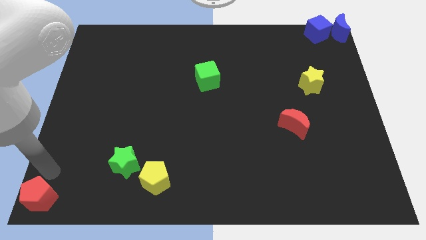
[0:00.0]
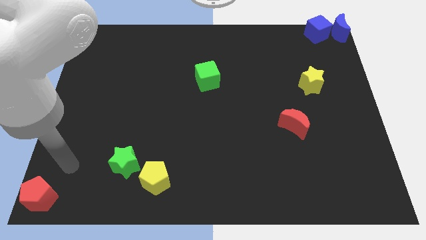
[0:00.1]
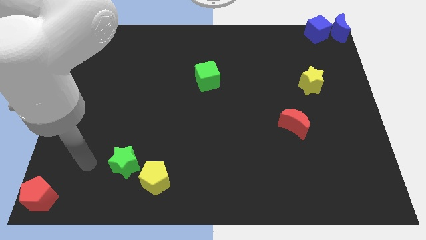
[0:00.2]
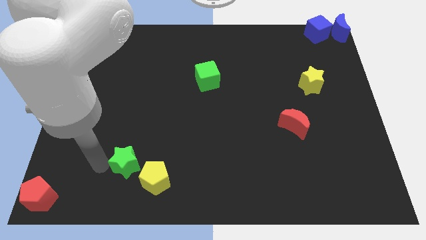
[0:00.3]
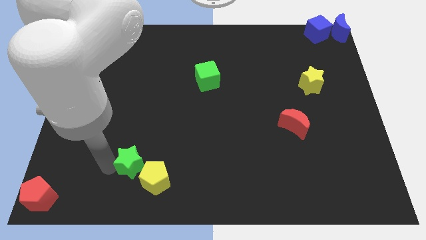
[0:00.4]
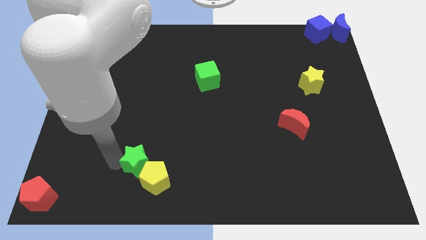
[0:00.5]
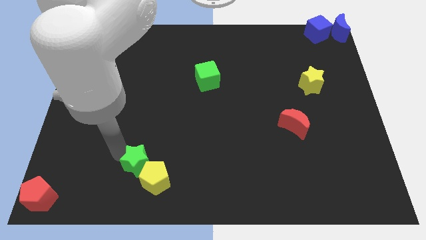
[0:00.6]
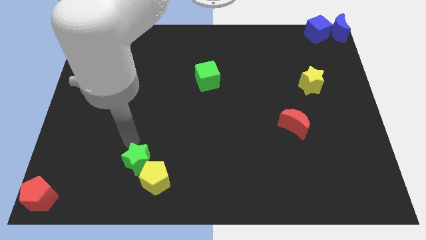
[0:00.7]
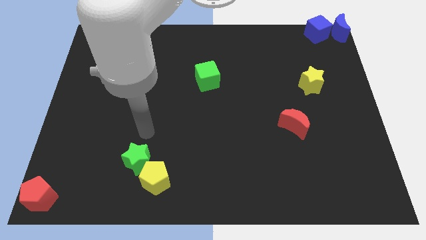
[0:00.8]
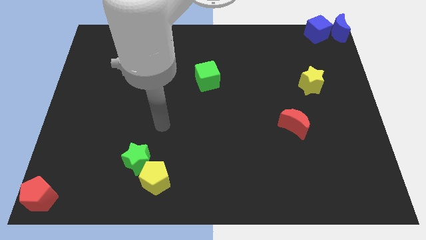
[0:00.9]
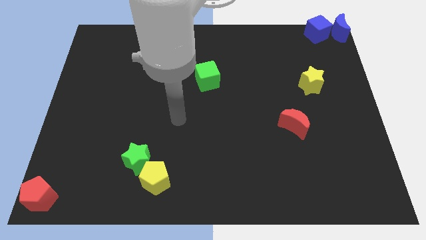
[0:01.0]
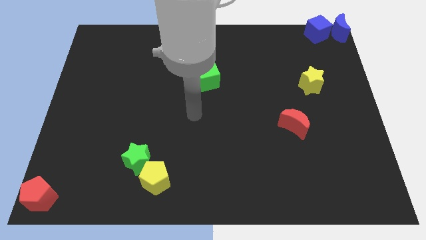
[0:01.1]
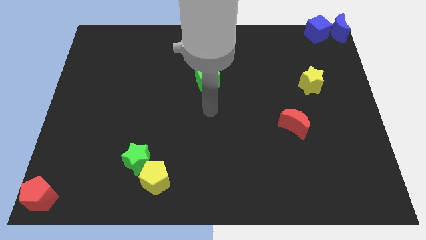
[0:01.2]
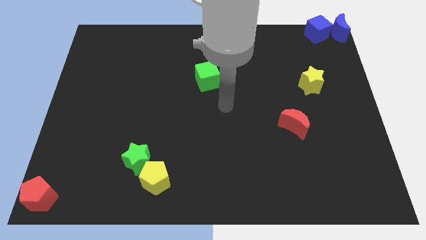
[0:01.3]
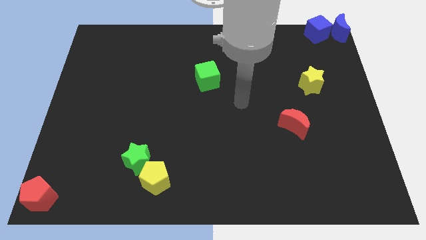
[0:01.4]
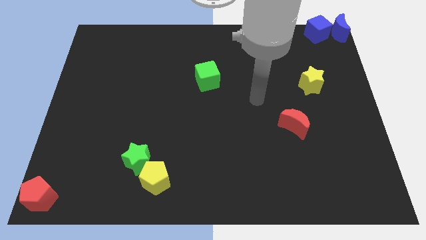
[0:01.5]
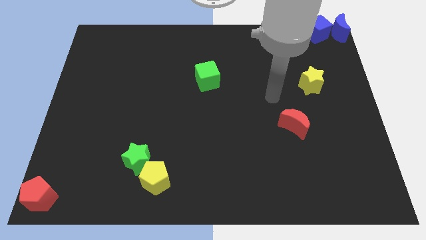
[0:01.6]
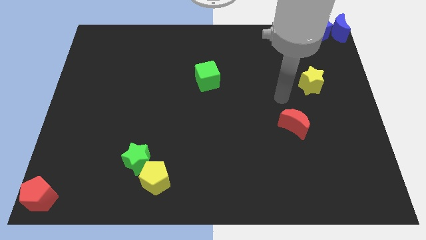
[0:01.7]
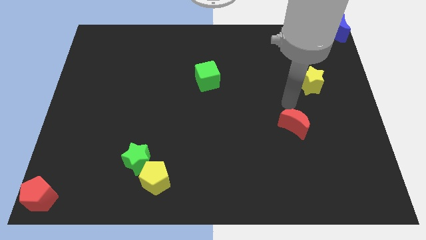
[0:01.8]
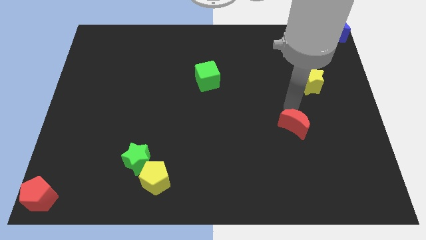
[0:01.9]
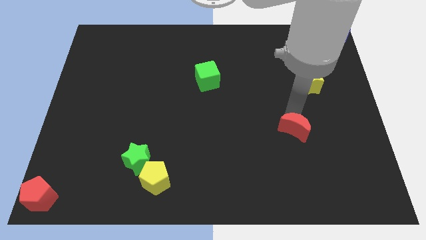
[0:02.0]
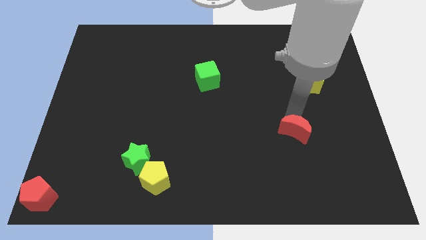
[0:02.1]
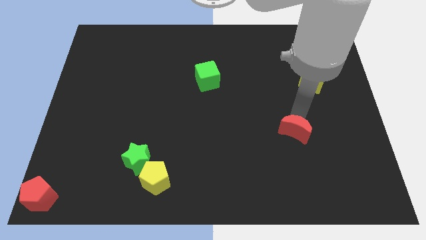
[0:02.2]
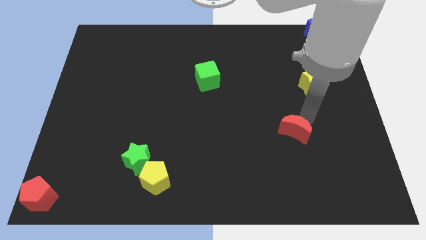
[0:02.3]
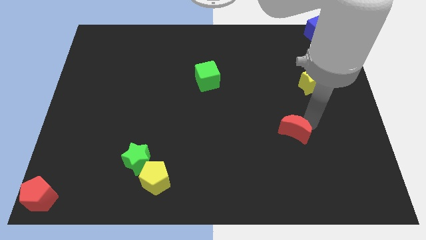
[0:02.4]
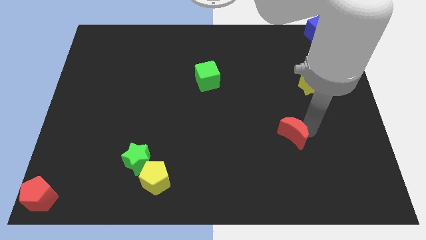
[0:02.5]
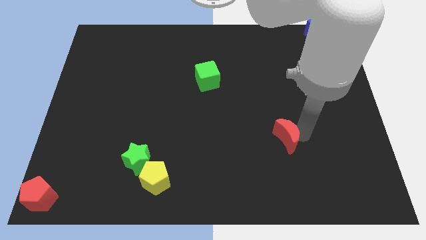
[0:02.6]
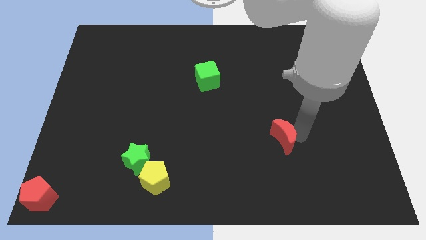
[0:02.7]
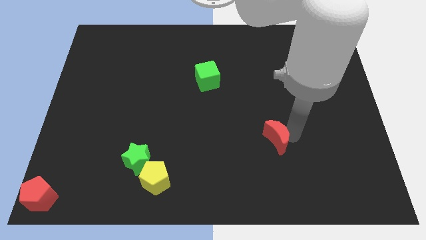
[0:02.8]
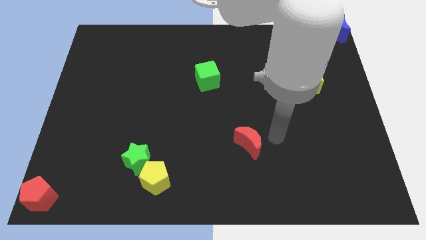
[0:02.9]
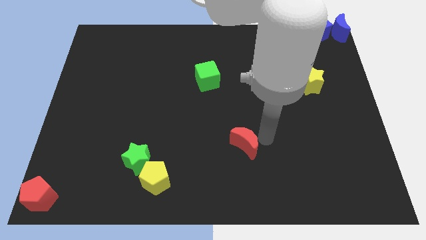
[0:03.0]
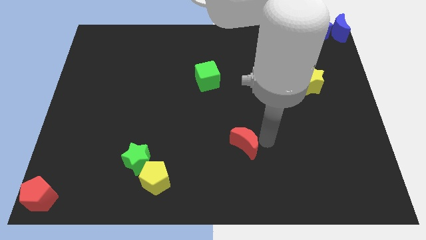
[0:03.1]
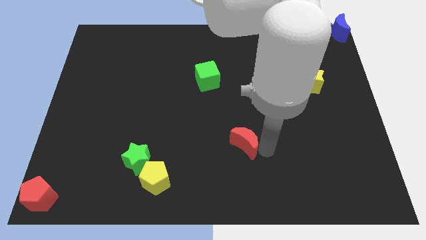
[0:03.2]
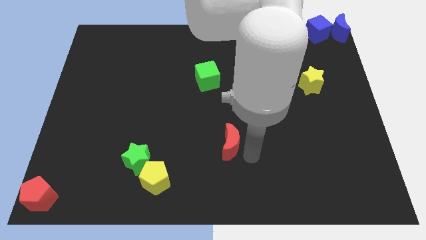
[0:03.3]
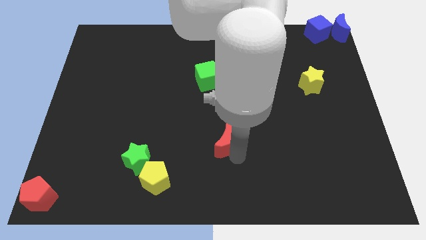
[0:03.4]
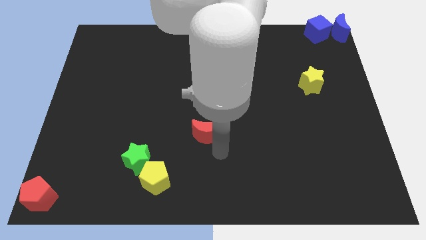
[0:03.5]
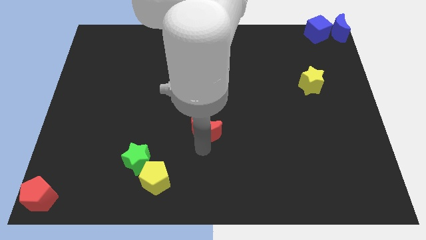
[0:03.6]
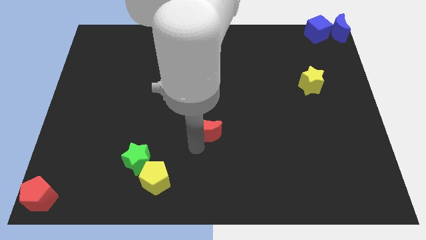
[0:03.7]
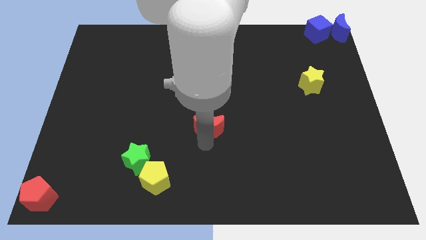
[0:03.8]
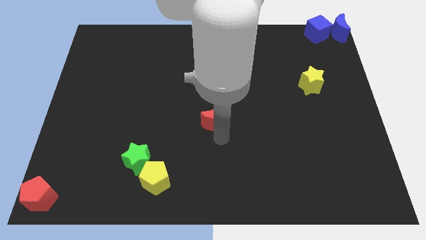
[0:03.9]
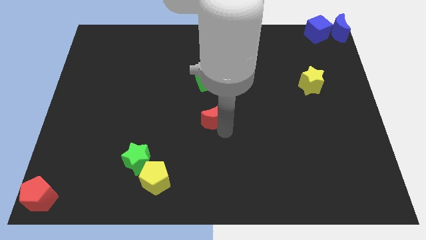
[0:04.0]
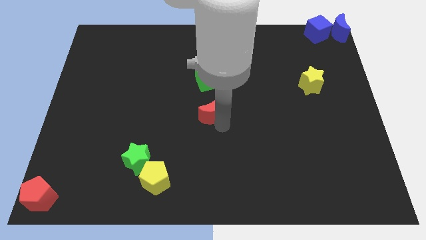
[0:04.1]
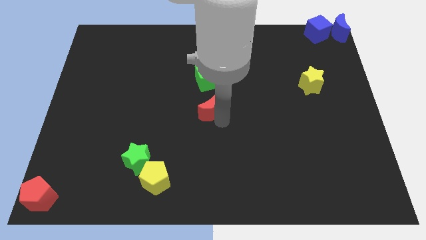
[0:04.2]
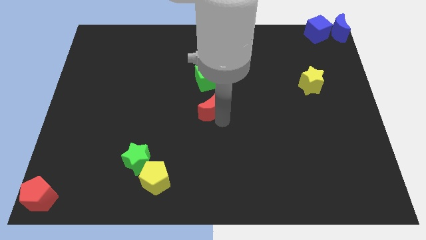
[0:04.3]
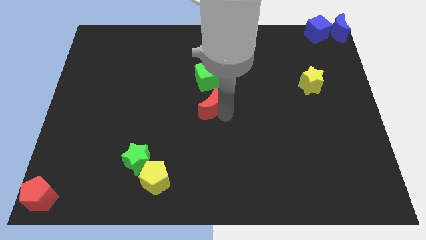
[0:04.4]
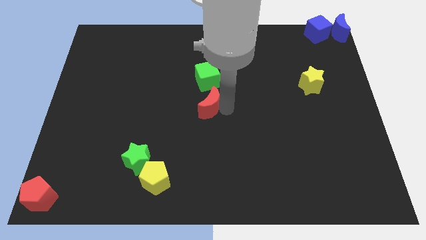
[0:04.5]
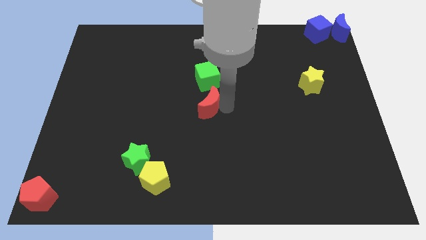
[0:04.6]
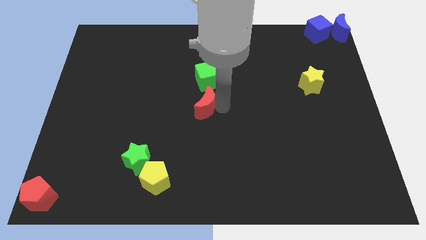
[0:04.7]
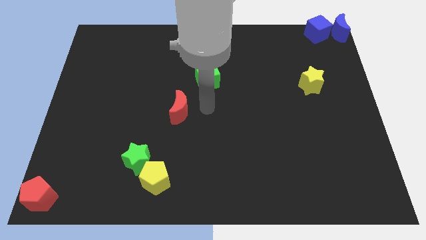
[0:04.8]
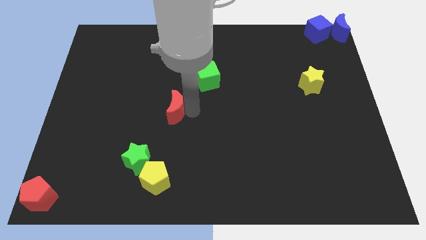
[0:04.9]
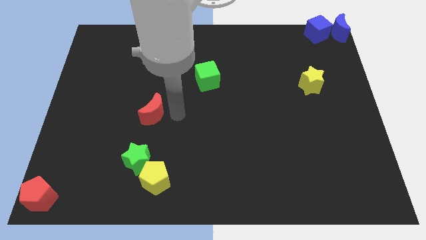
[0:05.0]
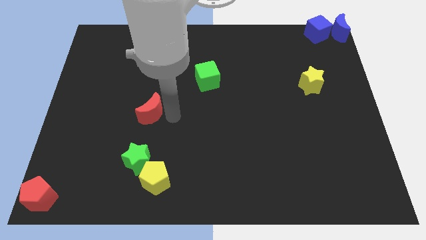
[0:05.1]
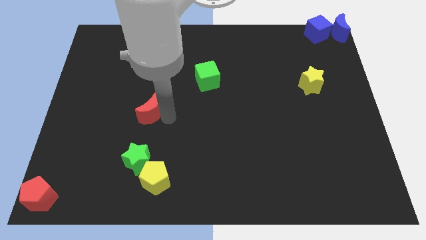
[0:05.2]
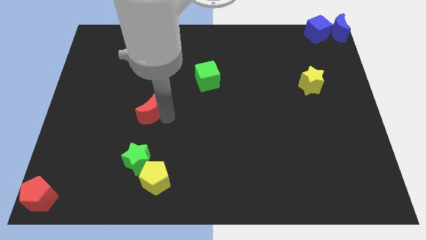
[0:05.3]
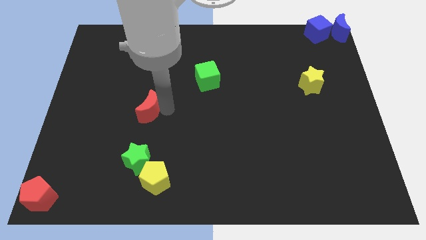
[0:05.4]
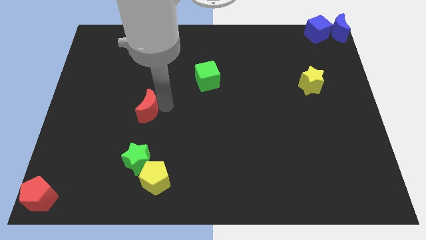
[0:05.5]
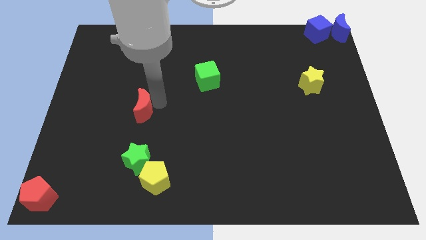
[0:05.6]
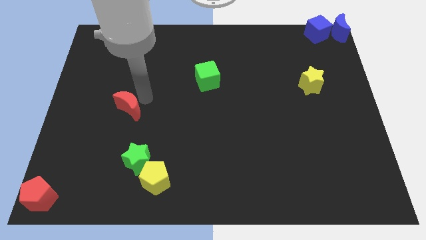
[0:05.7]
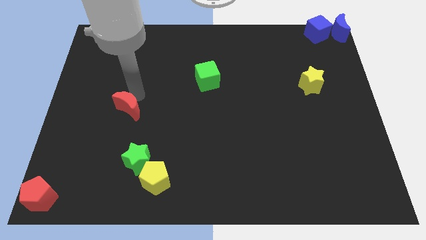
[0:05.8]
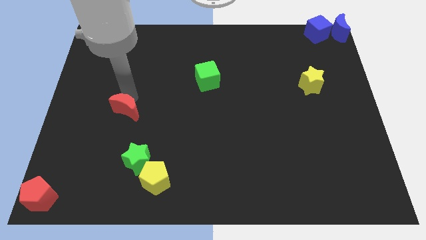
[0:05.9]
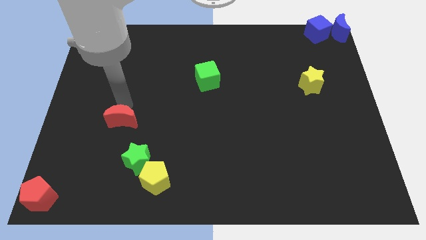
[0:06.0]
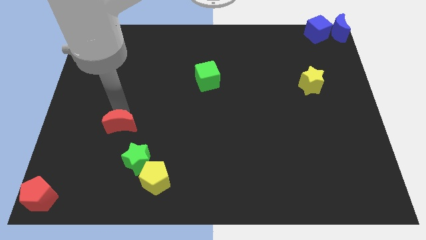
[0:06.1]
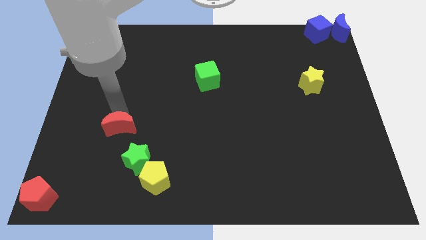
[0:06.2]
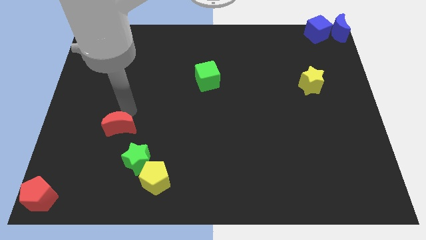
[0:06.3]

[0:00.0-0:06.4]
move the red crescent towards the center left of the board

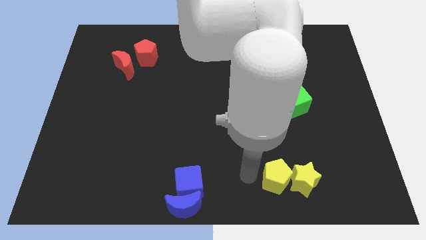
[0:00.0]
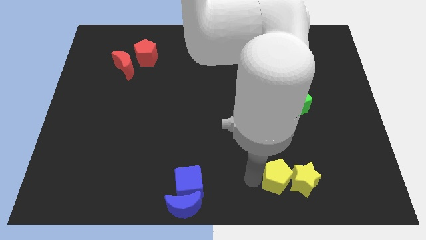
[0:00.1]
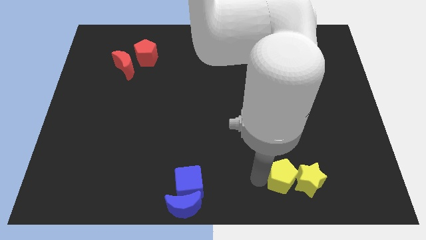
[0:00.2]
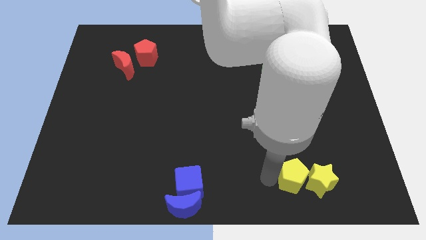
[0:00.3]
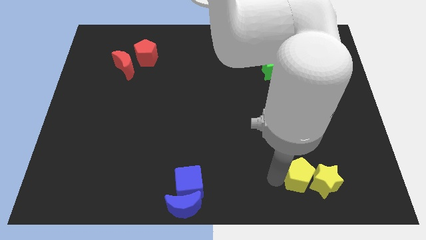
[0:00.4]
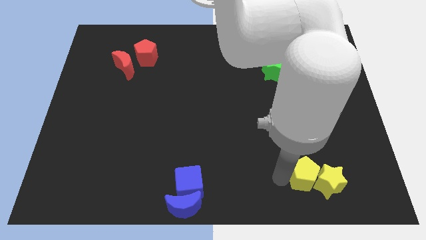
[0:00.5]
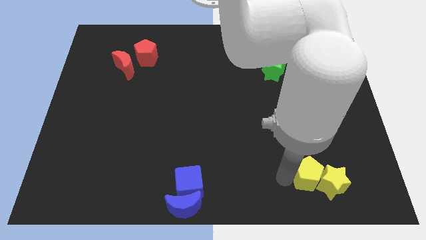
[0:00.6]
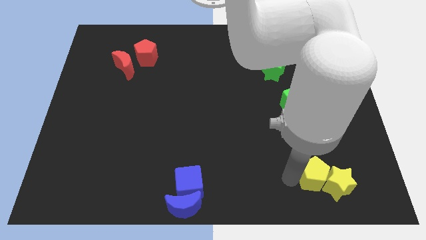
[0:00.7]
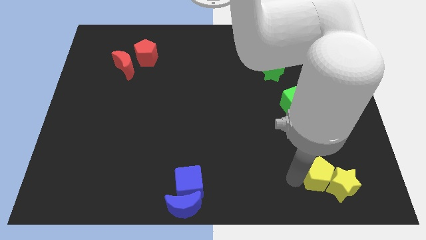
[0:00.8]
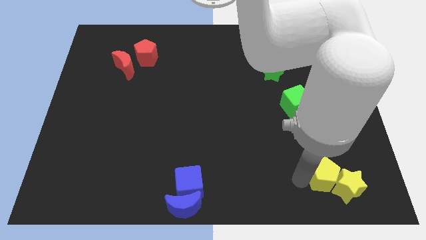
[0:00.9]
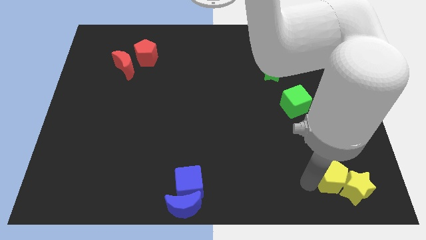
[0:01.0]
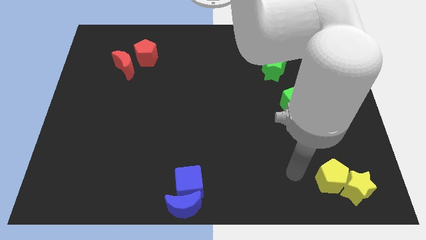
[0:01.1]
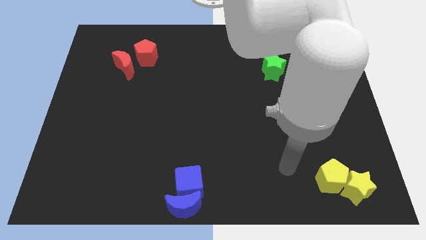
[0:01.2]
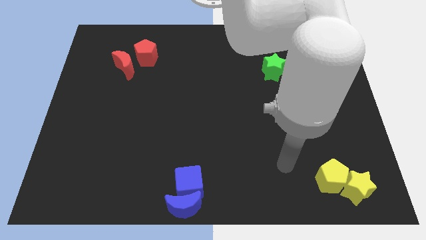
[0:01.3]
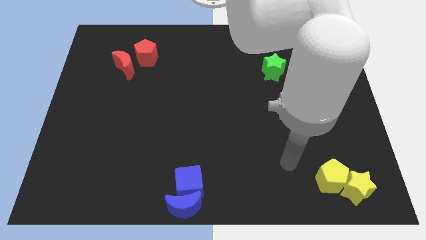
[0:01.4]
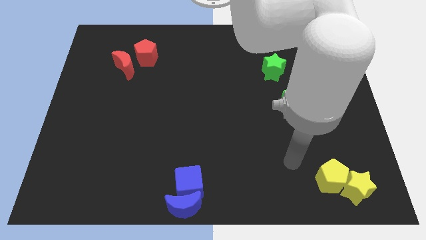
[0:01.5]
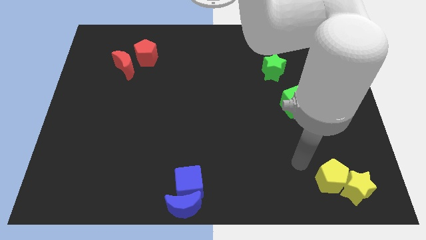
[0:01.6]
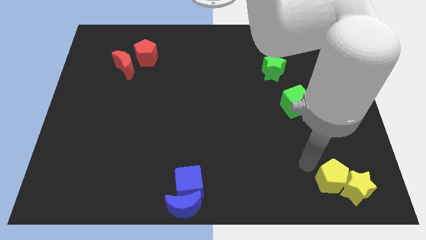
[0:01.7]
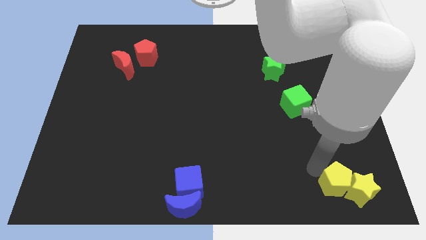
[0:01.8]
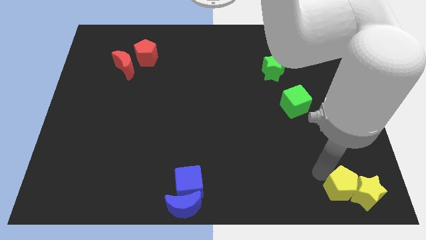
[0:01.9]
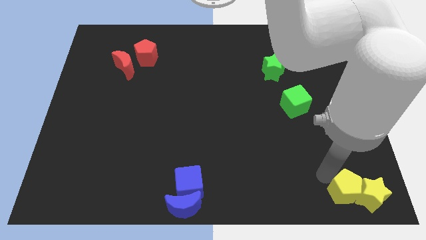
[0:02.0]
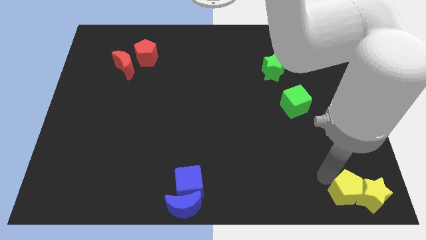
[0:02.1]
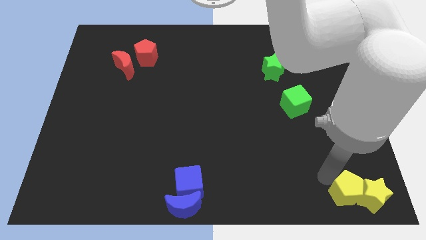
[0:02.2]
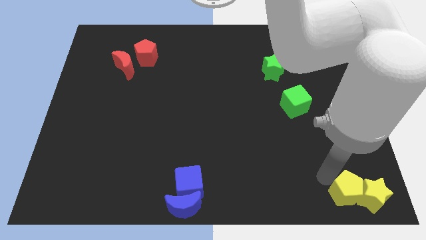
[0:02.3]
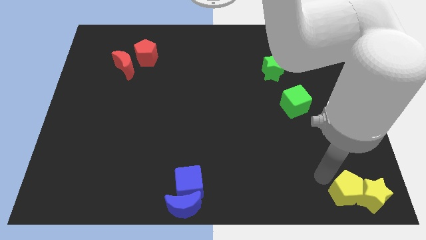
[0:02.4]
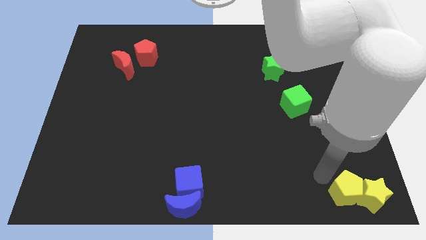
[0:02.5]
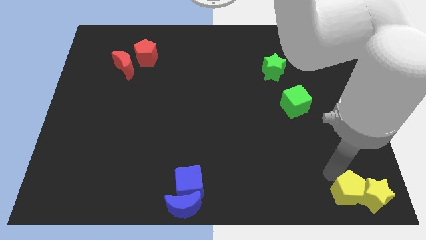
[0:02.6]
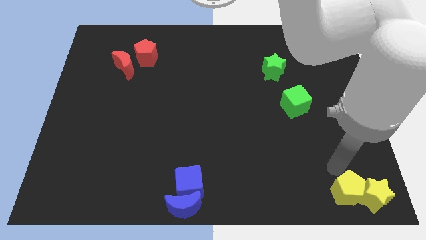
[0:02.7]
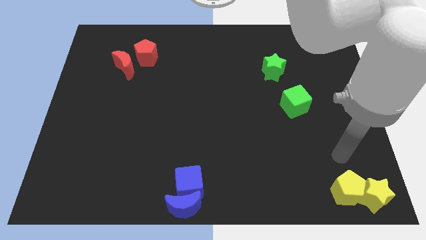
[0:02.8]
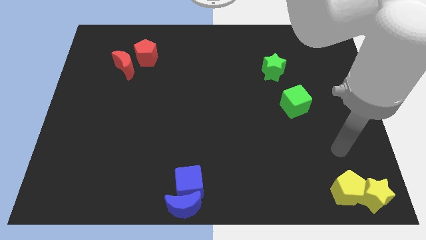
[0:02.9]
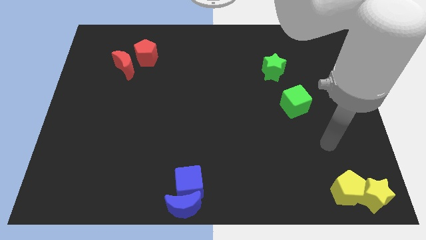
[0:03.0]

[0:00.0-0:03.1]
place the yellow blocks at the bottom right corner of the board
